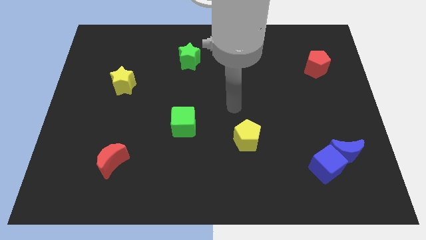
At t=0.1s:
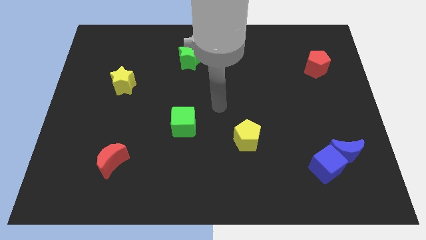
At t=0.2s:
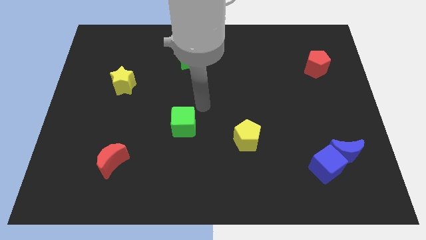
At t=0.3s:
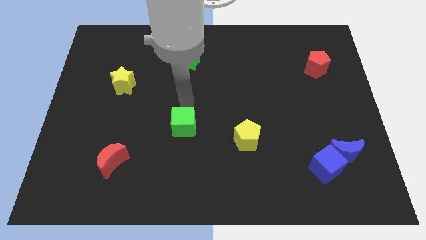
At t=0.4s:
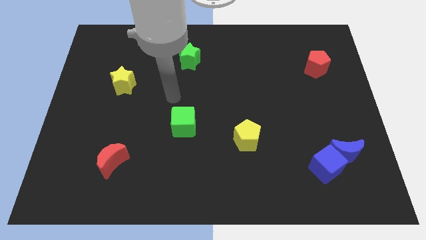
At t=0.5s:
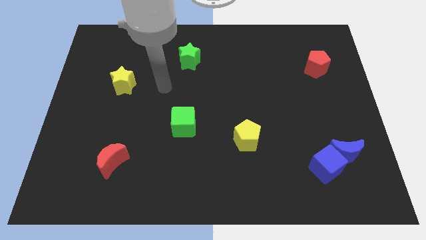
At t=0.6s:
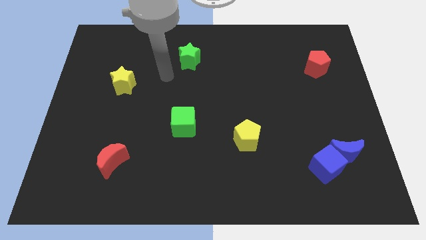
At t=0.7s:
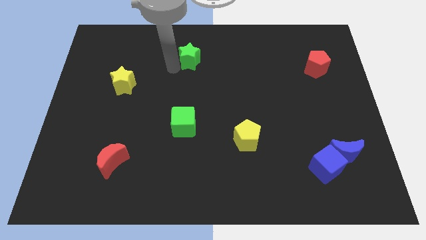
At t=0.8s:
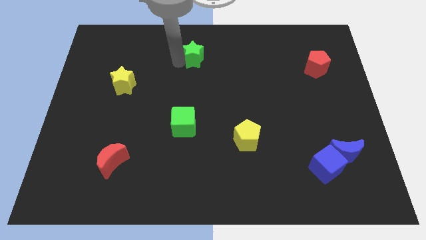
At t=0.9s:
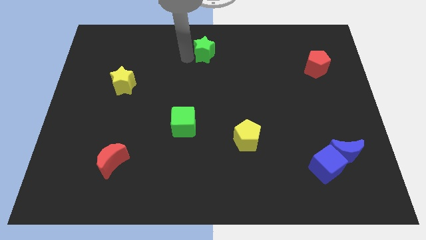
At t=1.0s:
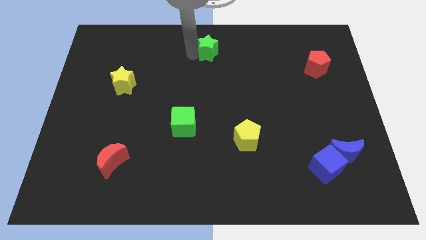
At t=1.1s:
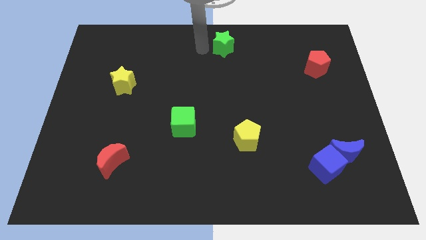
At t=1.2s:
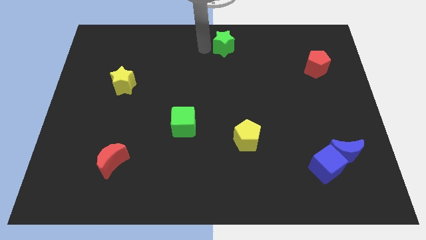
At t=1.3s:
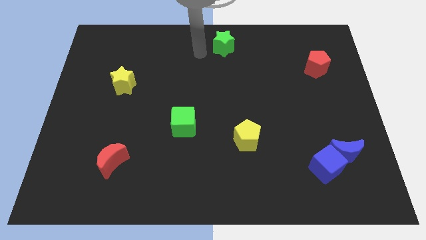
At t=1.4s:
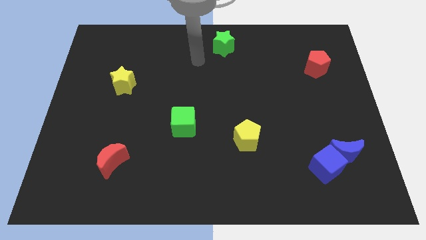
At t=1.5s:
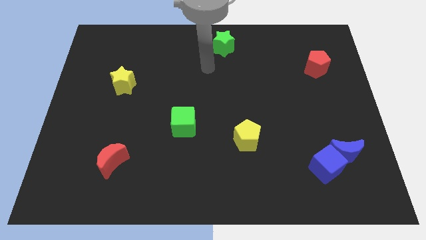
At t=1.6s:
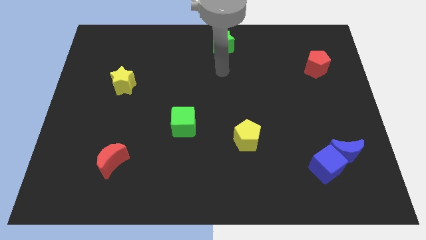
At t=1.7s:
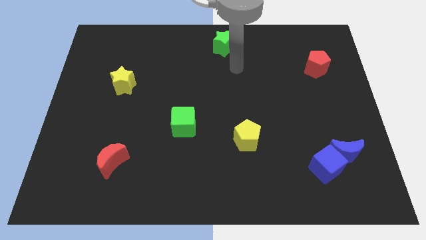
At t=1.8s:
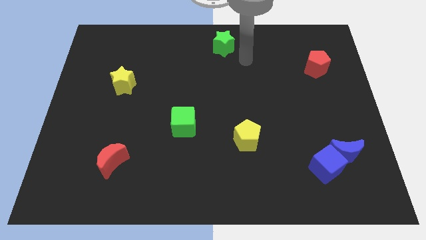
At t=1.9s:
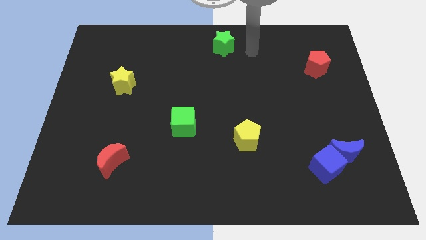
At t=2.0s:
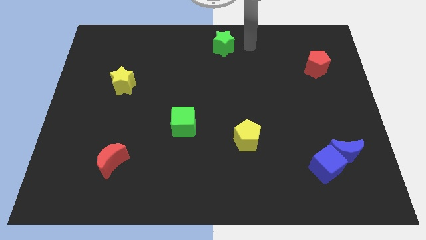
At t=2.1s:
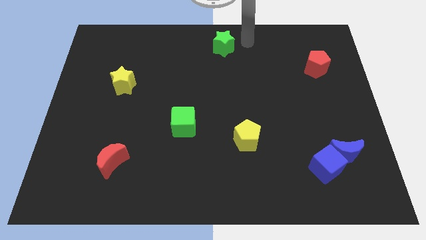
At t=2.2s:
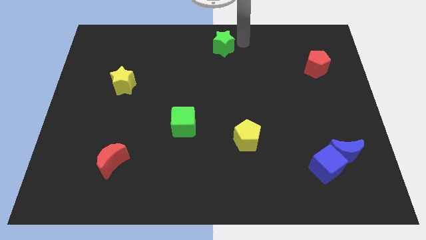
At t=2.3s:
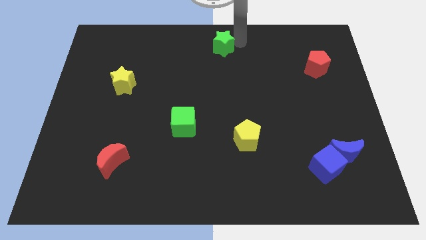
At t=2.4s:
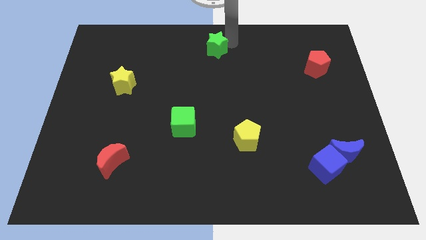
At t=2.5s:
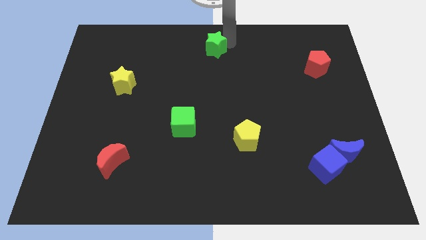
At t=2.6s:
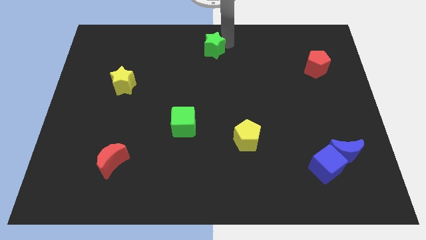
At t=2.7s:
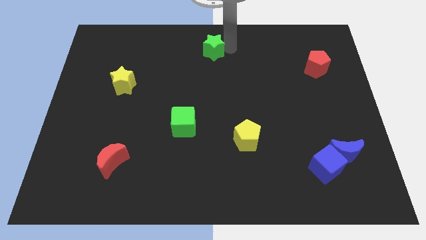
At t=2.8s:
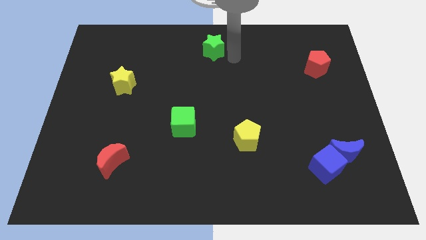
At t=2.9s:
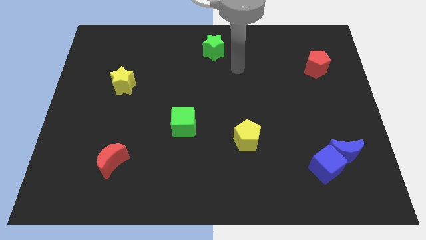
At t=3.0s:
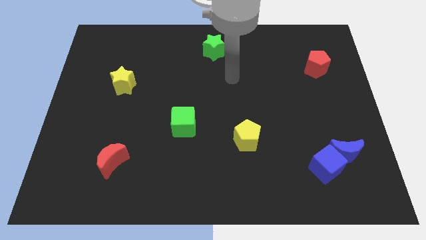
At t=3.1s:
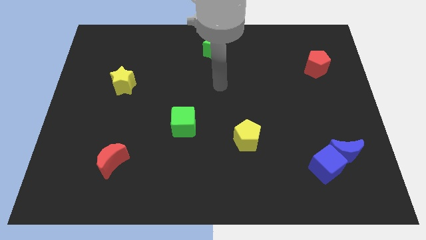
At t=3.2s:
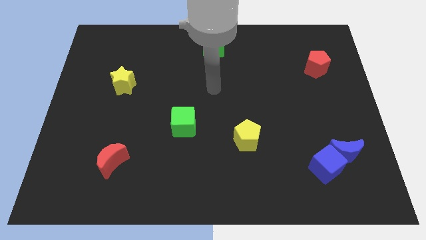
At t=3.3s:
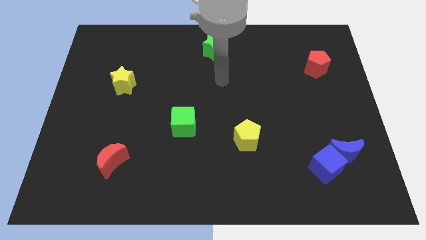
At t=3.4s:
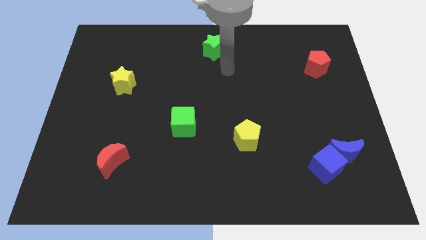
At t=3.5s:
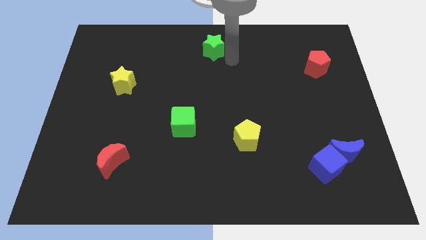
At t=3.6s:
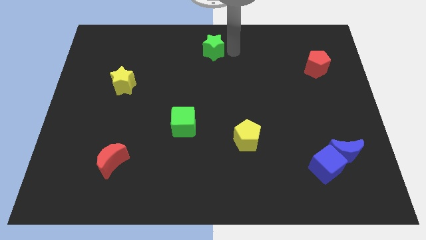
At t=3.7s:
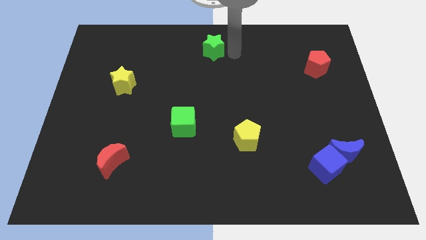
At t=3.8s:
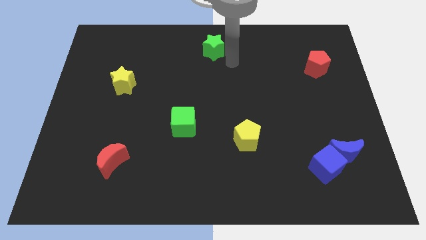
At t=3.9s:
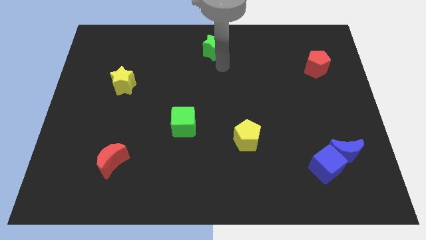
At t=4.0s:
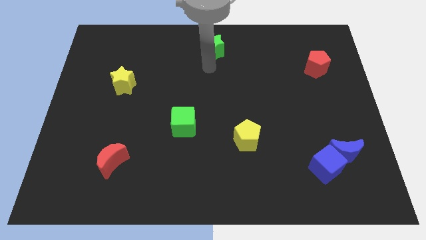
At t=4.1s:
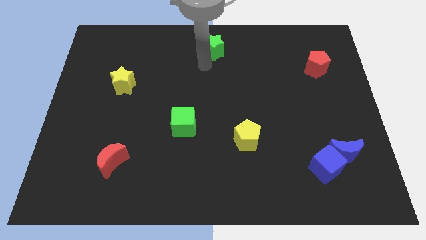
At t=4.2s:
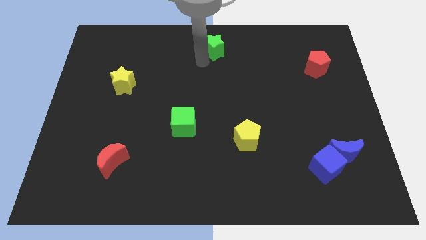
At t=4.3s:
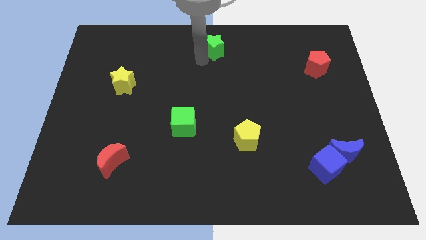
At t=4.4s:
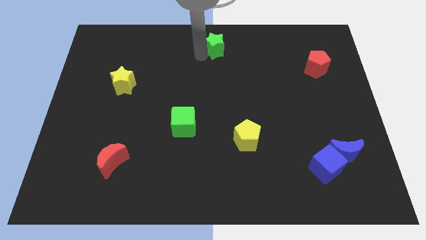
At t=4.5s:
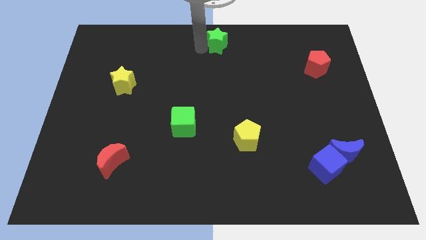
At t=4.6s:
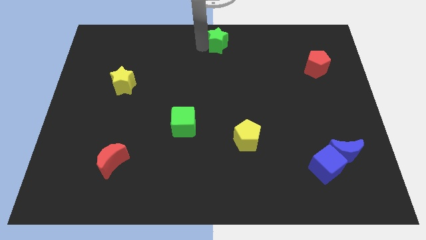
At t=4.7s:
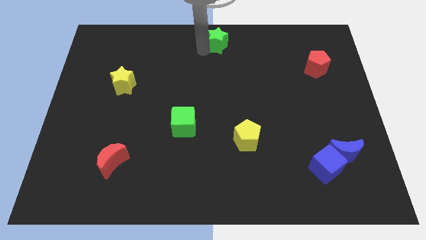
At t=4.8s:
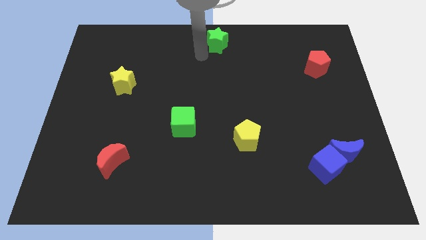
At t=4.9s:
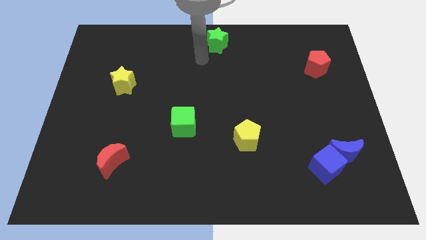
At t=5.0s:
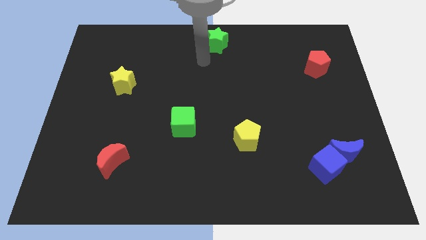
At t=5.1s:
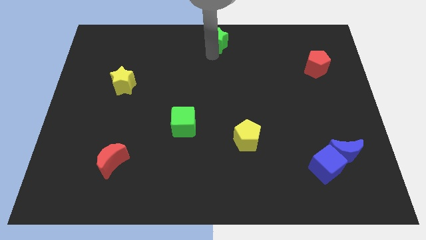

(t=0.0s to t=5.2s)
push the green star towards top center

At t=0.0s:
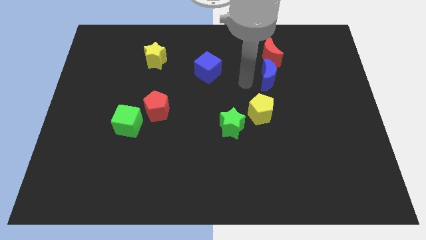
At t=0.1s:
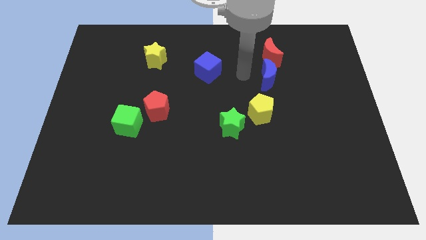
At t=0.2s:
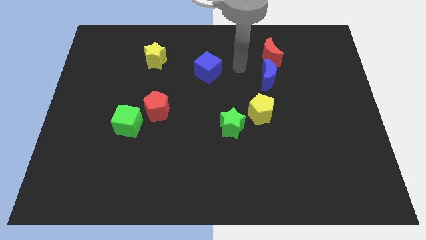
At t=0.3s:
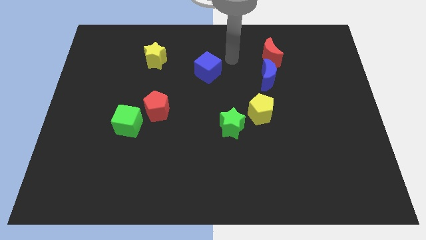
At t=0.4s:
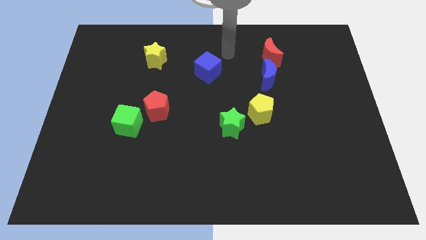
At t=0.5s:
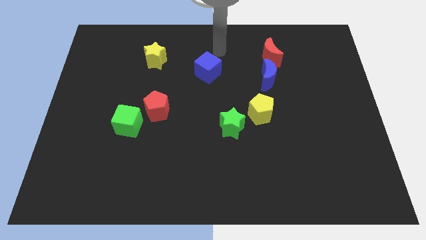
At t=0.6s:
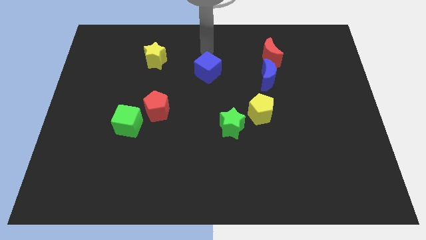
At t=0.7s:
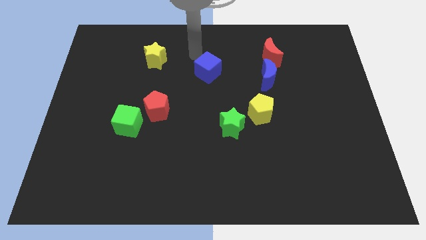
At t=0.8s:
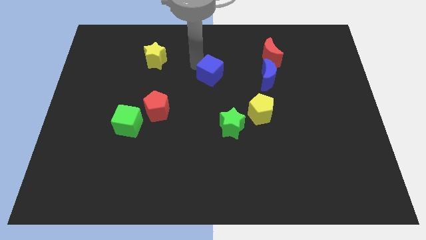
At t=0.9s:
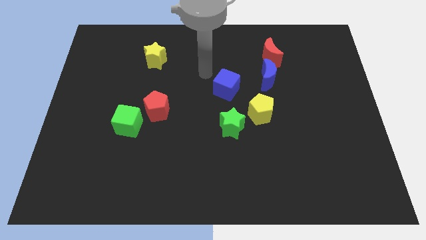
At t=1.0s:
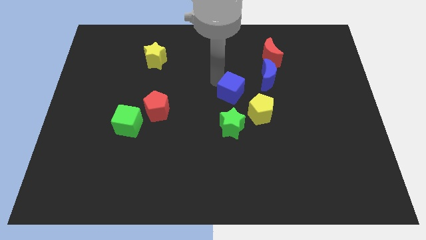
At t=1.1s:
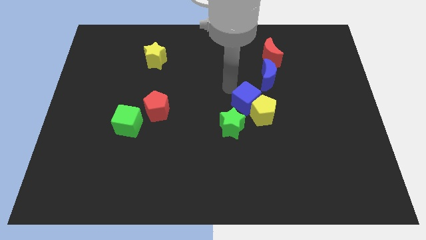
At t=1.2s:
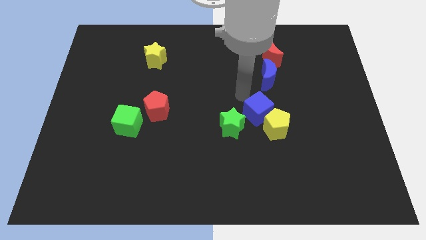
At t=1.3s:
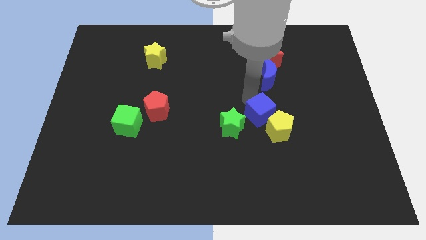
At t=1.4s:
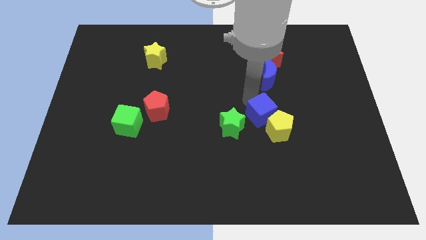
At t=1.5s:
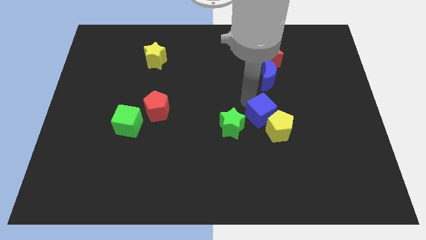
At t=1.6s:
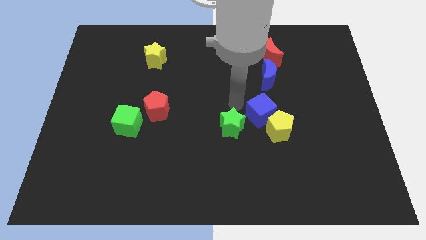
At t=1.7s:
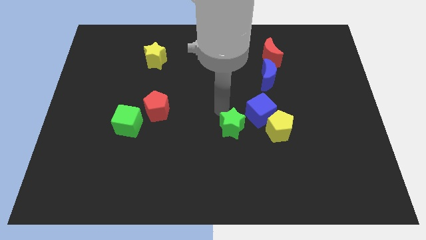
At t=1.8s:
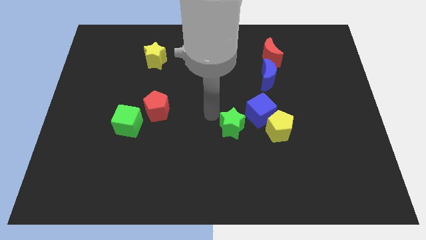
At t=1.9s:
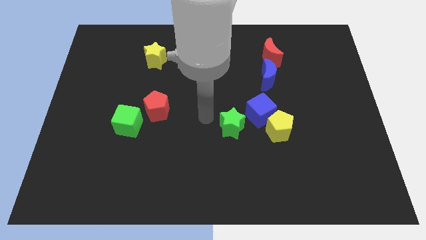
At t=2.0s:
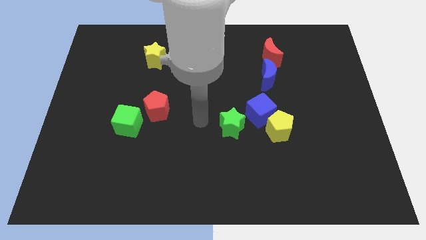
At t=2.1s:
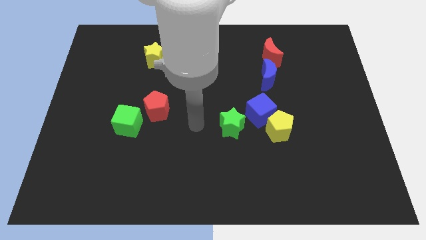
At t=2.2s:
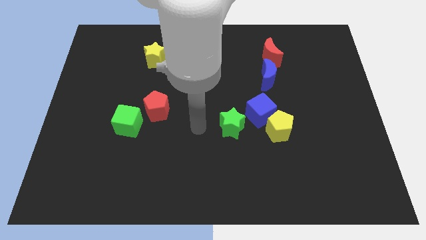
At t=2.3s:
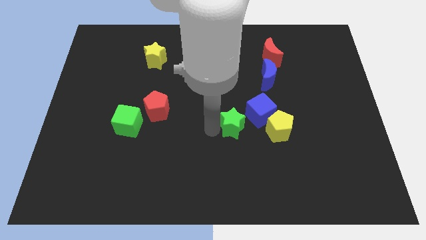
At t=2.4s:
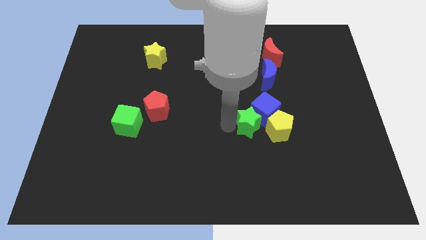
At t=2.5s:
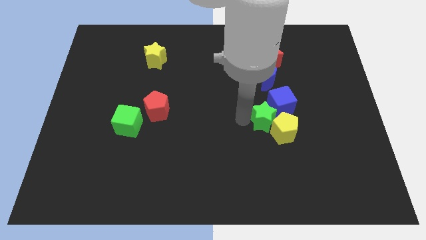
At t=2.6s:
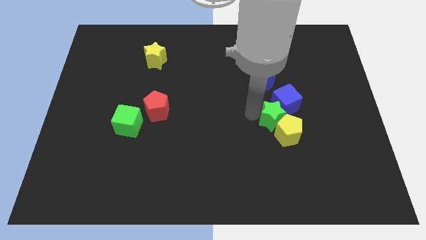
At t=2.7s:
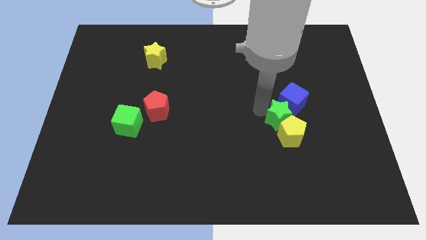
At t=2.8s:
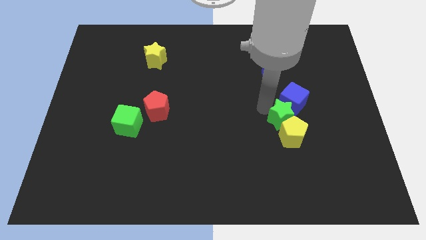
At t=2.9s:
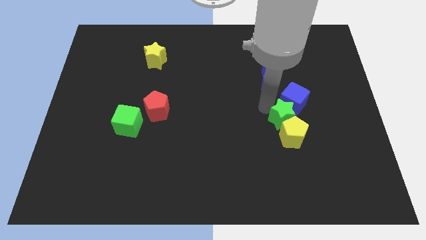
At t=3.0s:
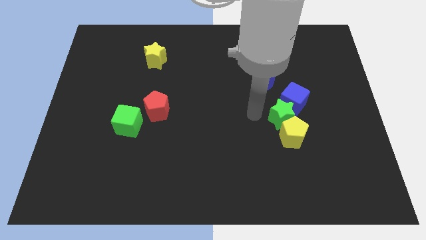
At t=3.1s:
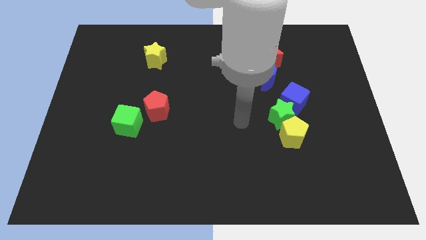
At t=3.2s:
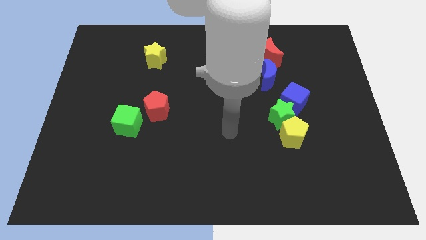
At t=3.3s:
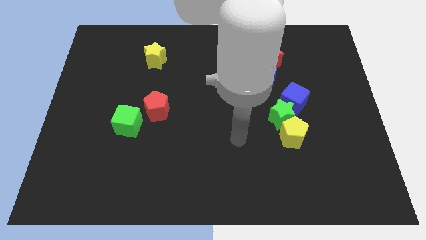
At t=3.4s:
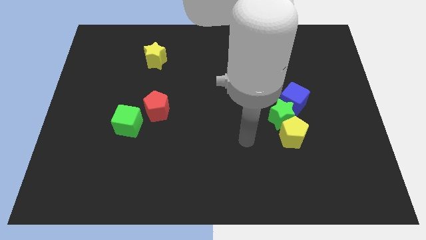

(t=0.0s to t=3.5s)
push the green star and place it above the yellow pentagon

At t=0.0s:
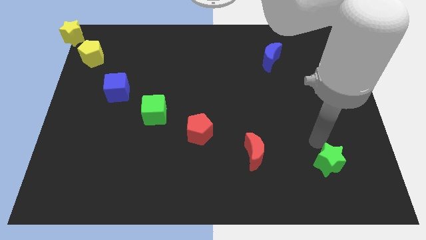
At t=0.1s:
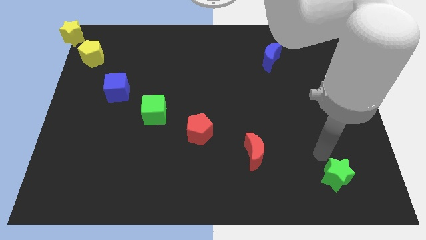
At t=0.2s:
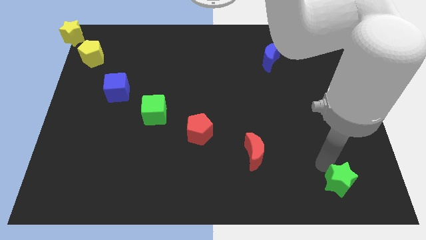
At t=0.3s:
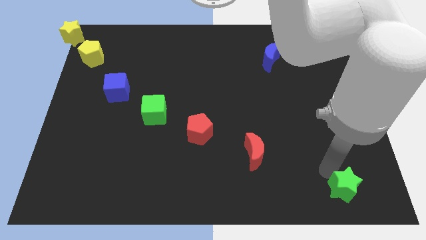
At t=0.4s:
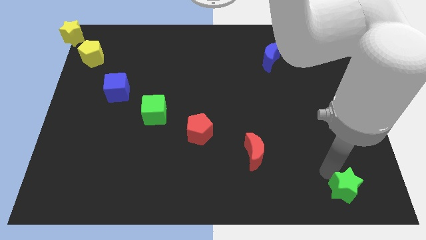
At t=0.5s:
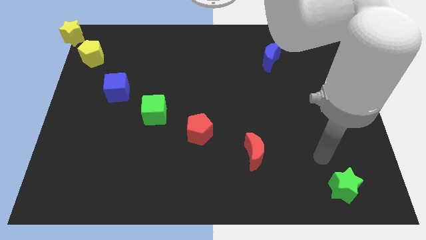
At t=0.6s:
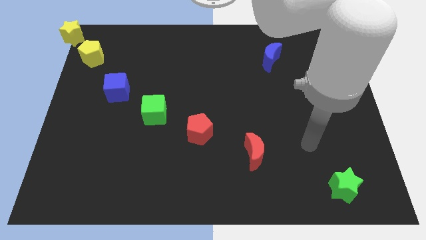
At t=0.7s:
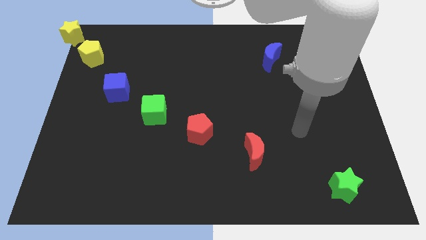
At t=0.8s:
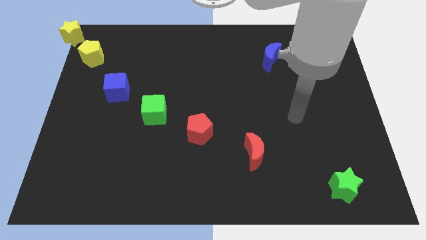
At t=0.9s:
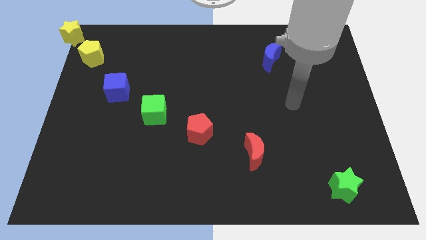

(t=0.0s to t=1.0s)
push the green star to the bottom right of the board
